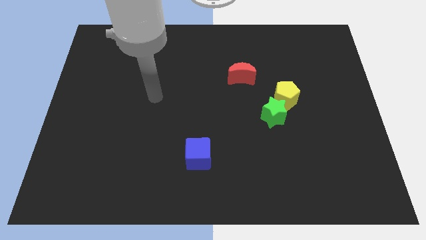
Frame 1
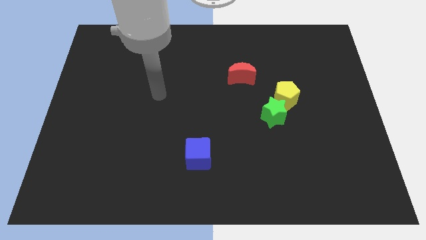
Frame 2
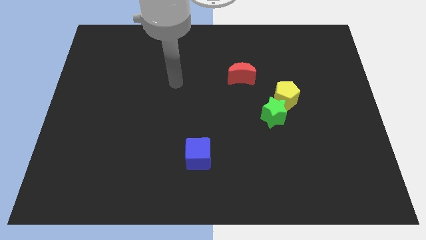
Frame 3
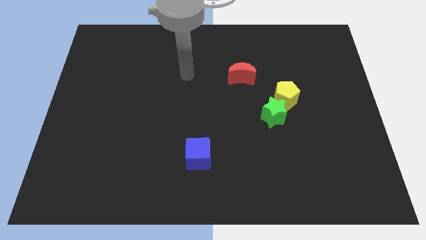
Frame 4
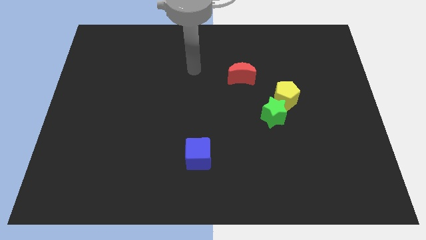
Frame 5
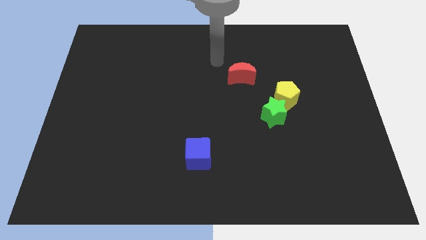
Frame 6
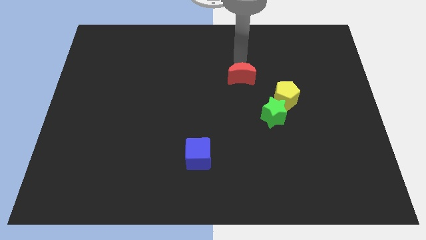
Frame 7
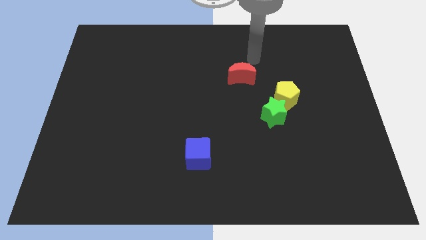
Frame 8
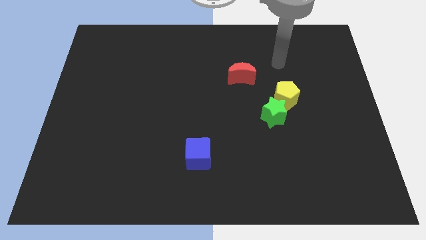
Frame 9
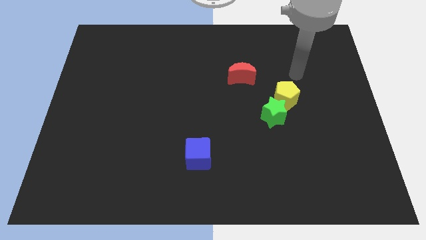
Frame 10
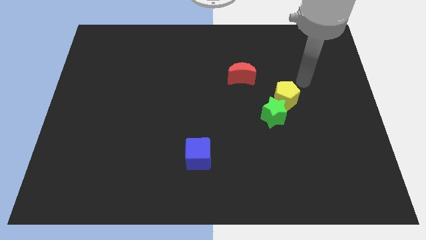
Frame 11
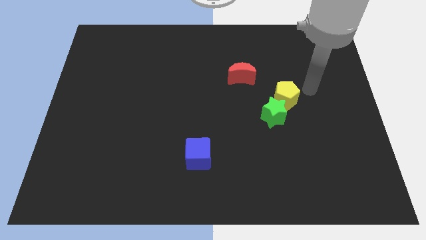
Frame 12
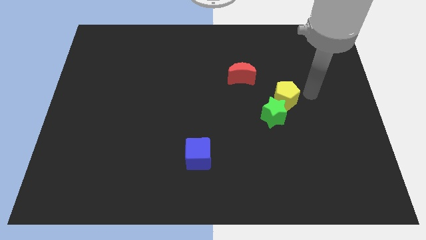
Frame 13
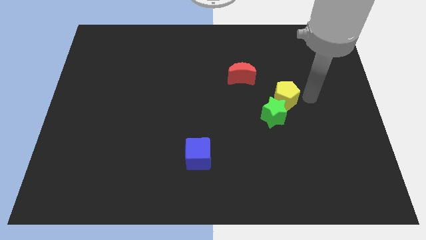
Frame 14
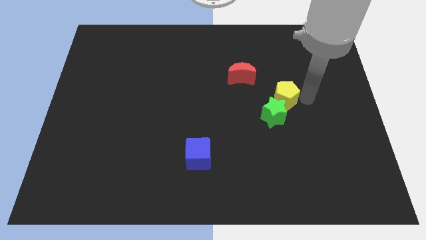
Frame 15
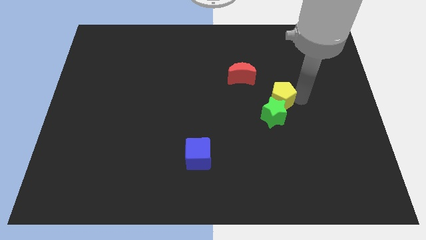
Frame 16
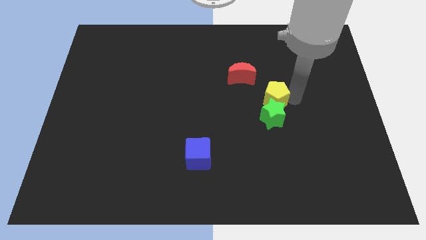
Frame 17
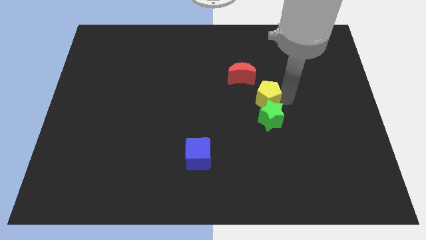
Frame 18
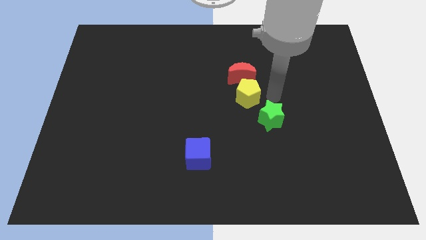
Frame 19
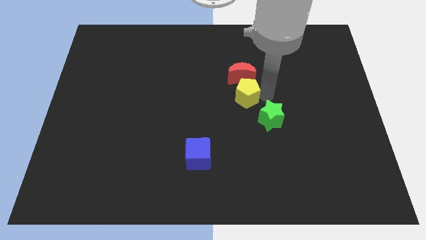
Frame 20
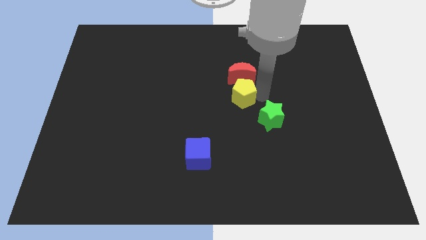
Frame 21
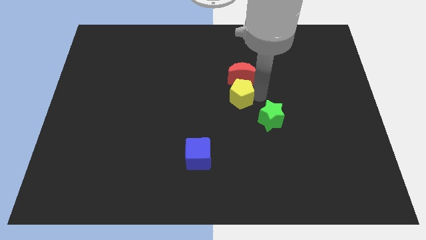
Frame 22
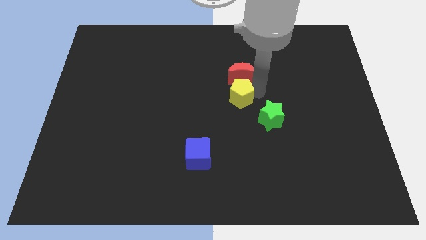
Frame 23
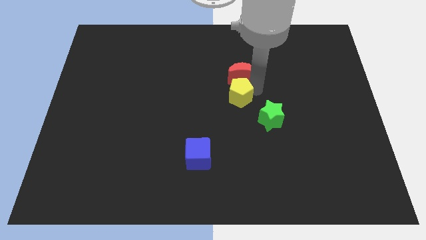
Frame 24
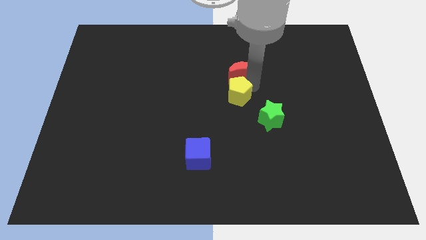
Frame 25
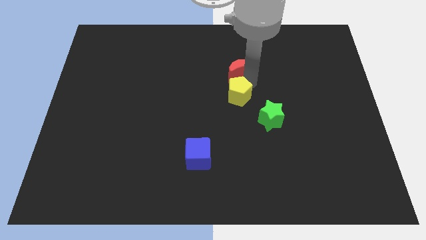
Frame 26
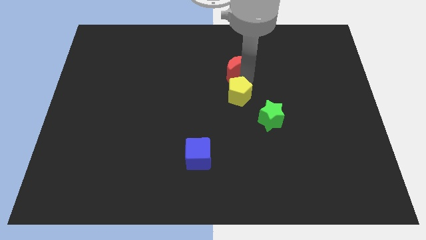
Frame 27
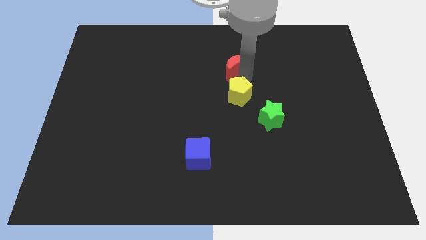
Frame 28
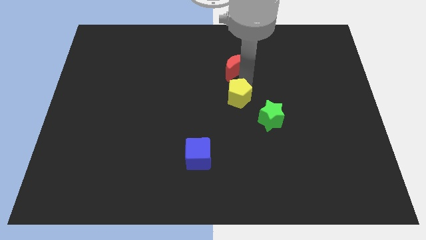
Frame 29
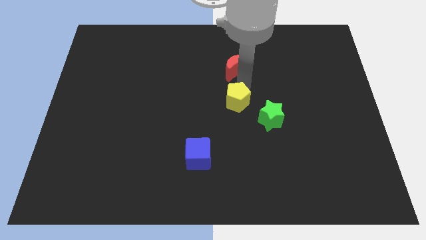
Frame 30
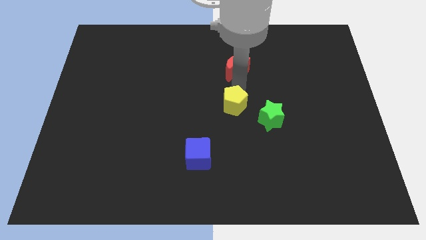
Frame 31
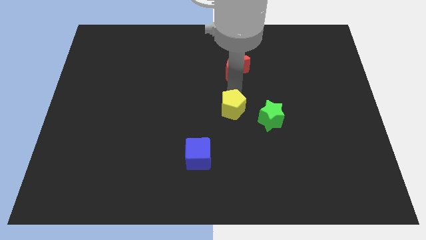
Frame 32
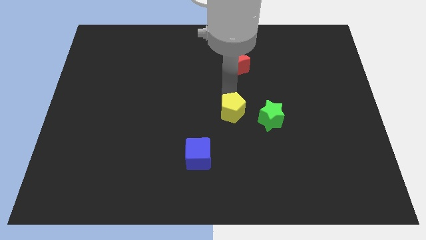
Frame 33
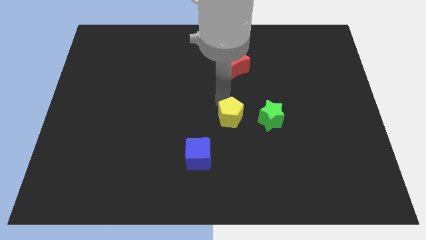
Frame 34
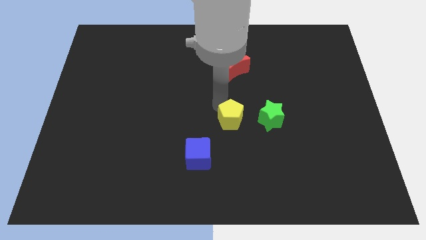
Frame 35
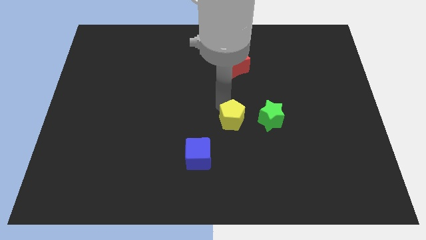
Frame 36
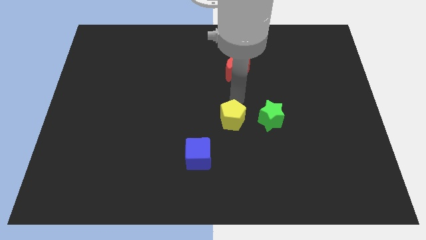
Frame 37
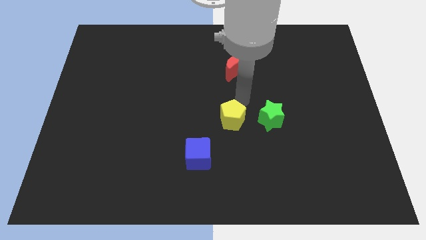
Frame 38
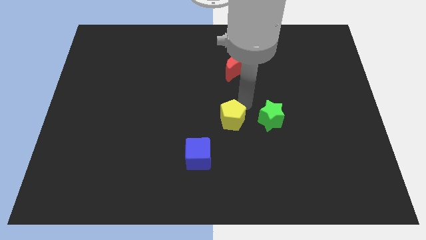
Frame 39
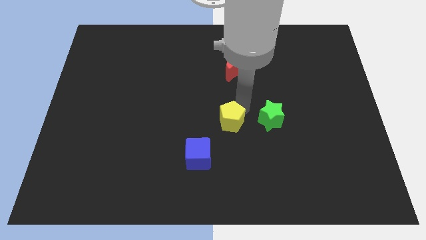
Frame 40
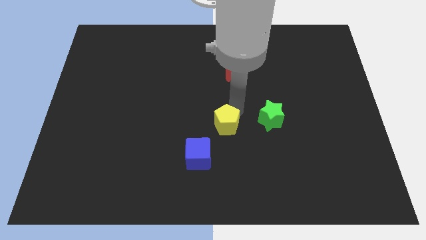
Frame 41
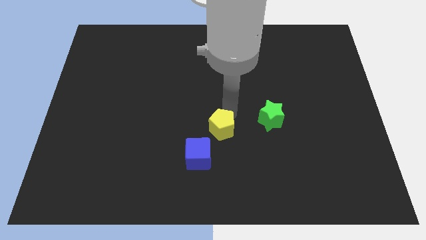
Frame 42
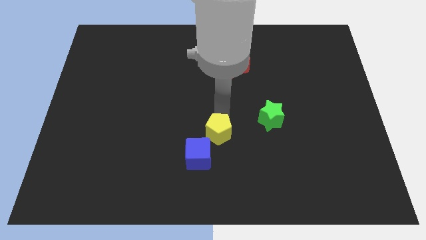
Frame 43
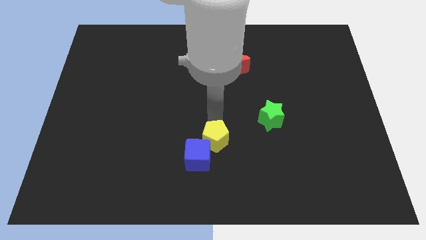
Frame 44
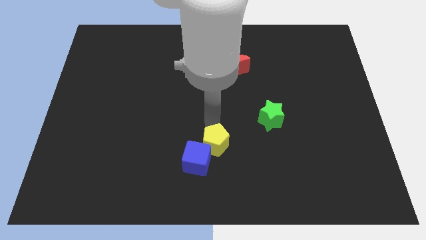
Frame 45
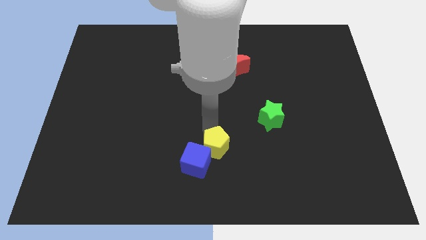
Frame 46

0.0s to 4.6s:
move the yellow block to the blue block

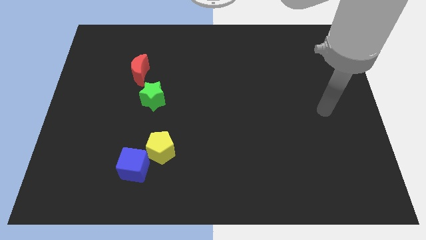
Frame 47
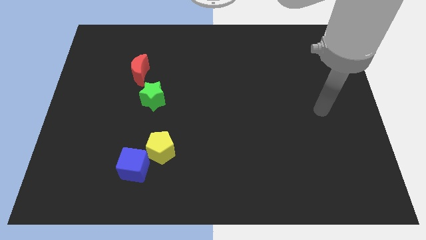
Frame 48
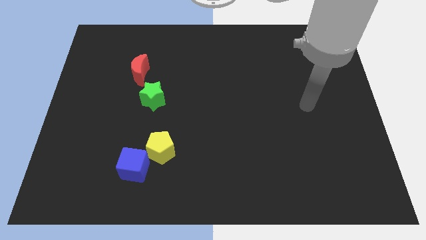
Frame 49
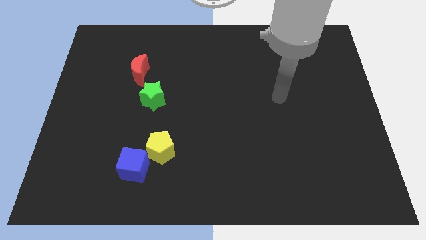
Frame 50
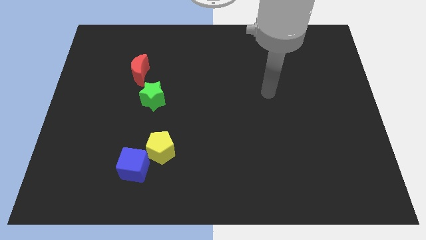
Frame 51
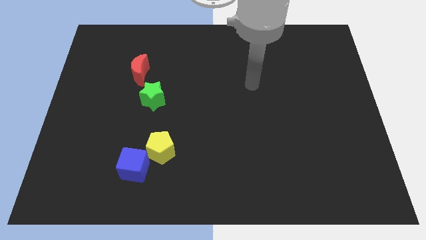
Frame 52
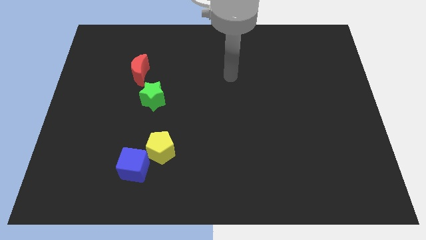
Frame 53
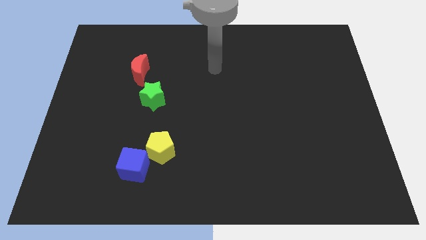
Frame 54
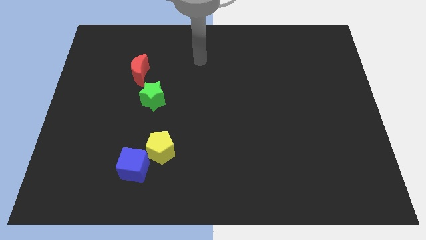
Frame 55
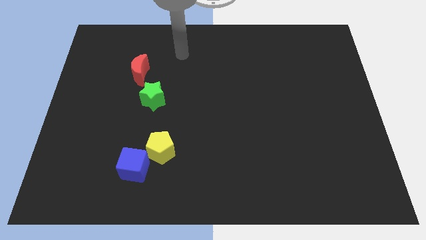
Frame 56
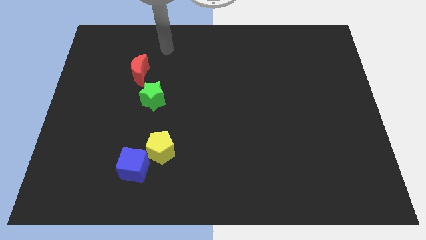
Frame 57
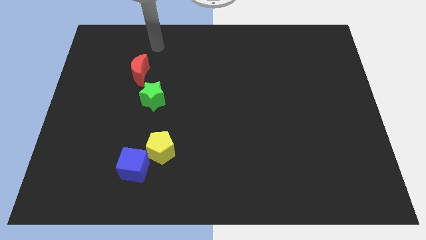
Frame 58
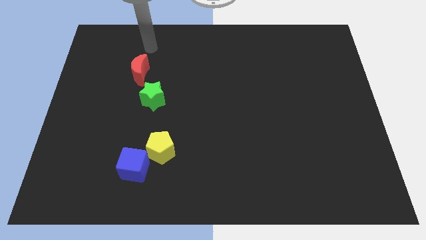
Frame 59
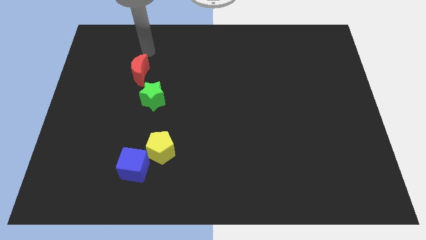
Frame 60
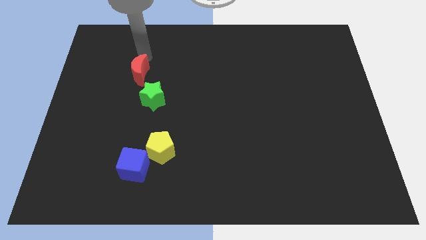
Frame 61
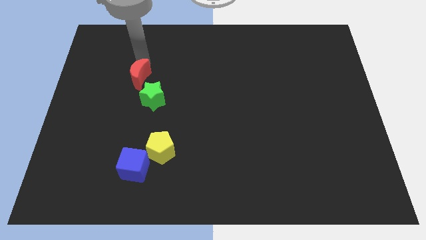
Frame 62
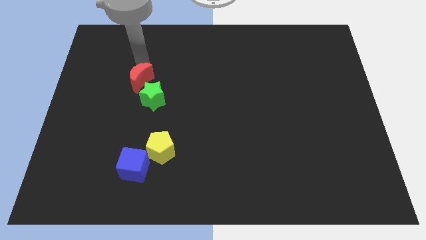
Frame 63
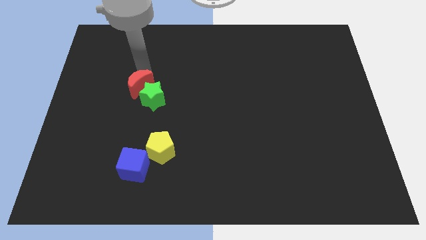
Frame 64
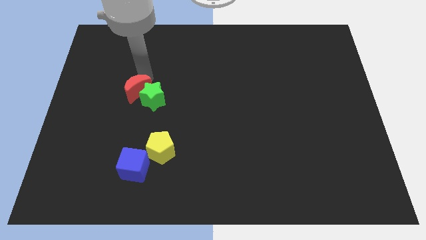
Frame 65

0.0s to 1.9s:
put the red block to the star

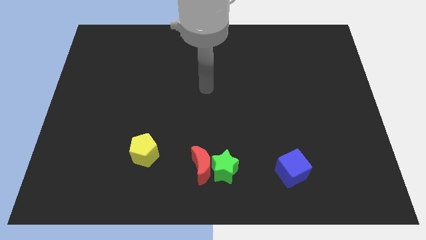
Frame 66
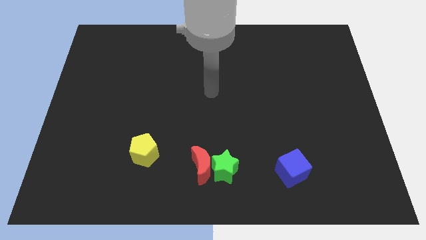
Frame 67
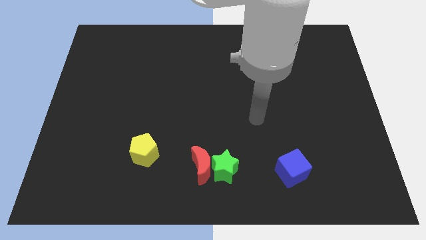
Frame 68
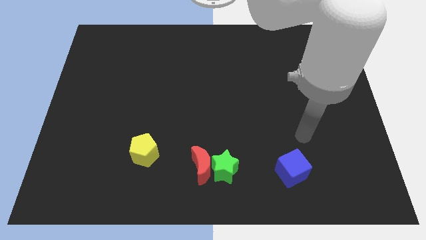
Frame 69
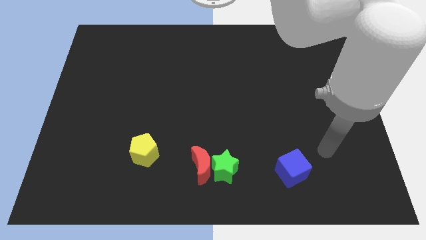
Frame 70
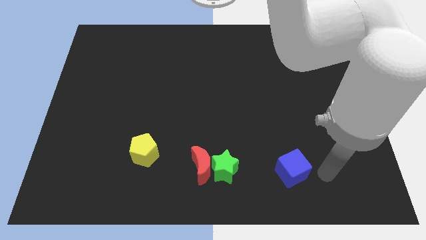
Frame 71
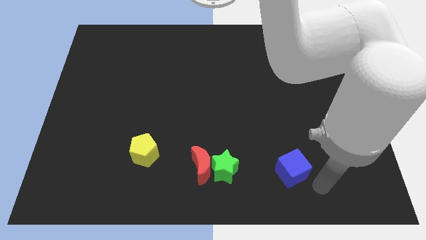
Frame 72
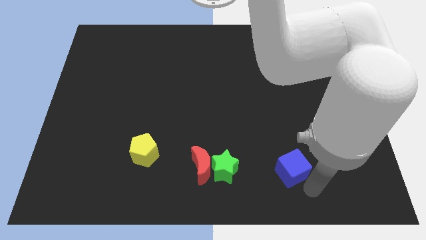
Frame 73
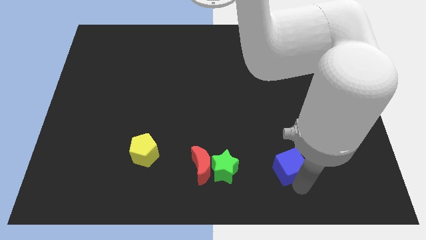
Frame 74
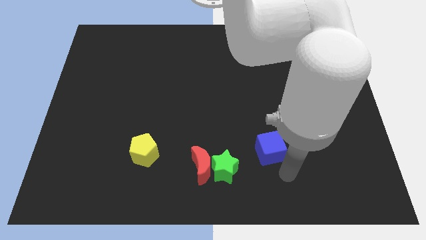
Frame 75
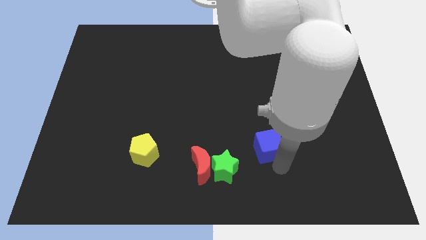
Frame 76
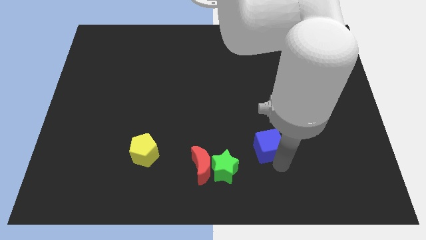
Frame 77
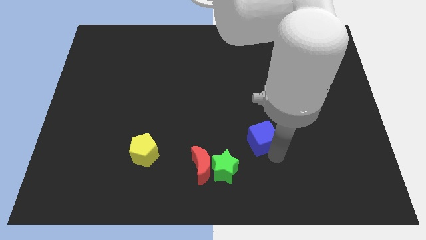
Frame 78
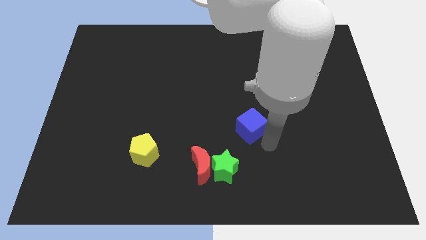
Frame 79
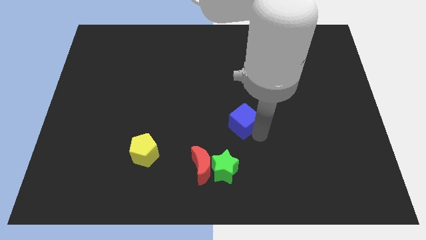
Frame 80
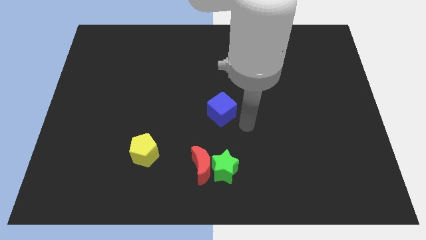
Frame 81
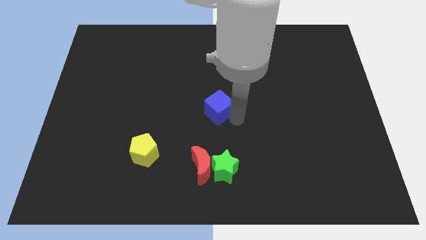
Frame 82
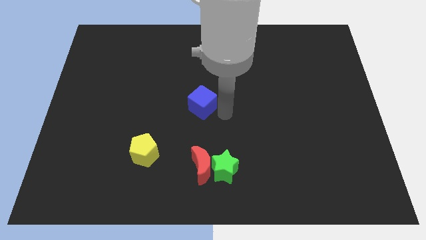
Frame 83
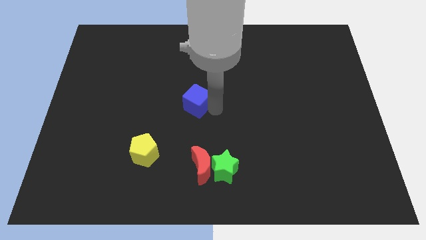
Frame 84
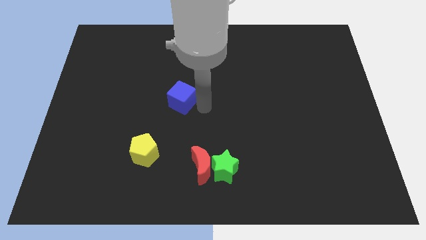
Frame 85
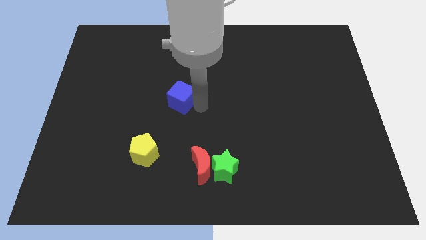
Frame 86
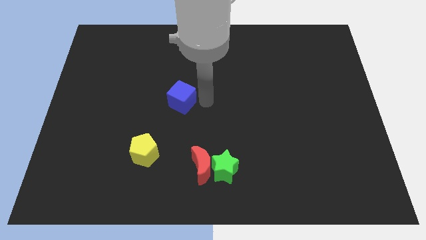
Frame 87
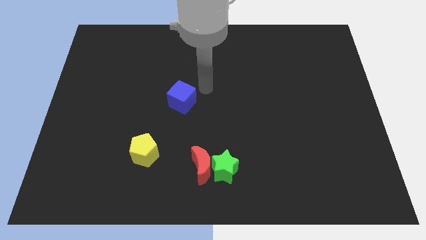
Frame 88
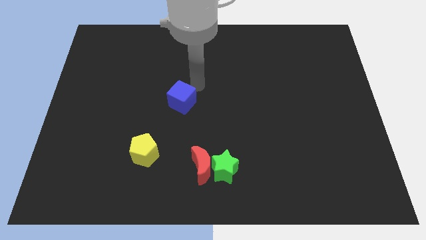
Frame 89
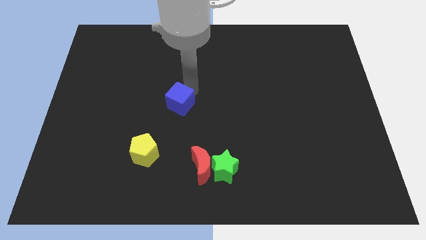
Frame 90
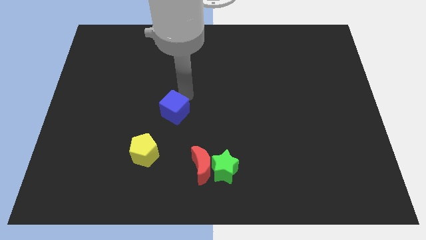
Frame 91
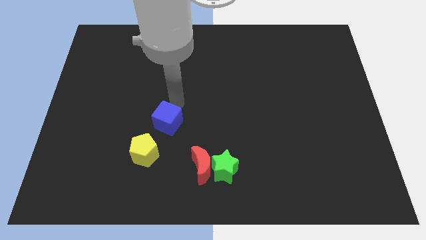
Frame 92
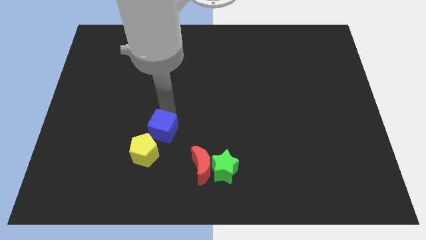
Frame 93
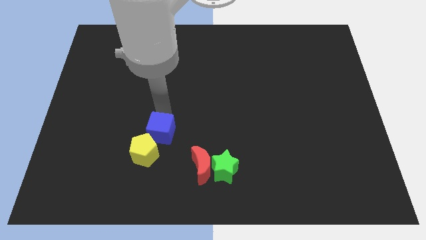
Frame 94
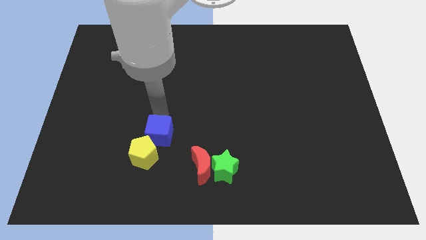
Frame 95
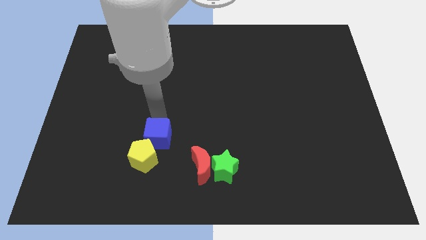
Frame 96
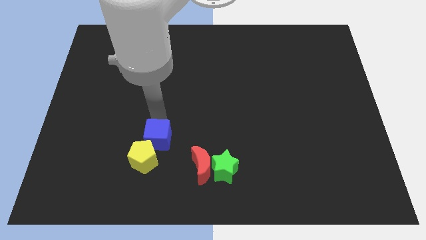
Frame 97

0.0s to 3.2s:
push the blue block towards the yellow pentagon
